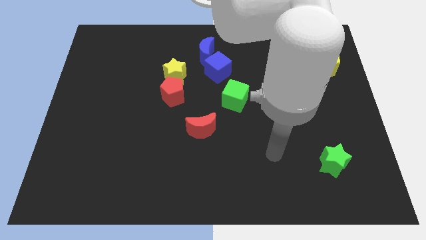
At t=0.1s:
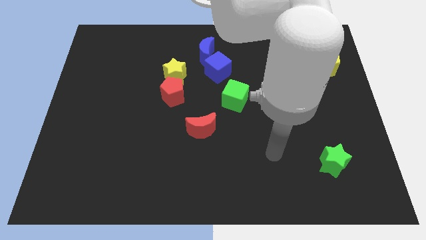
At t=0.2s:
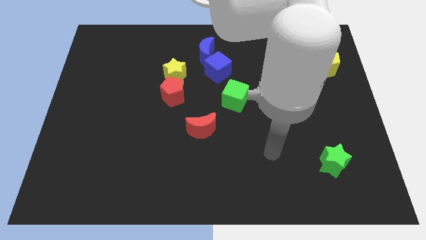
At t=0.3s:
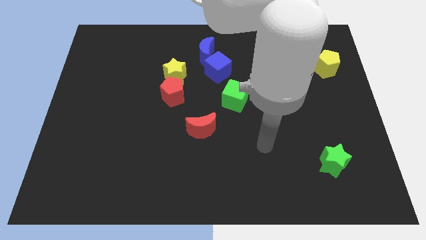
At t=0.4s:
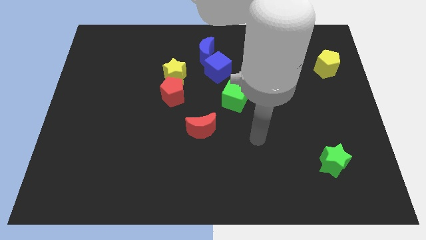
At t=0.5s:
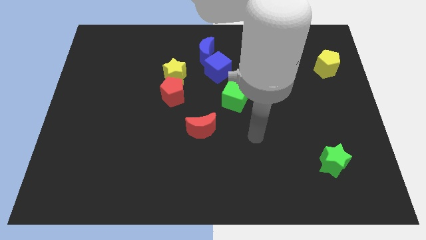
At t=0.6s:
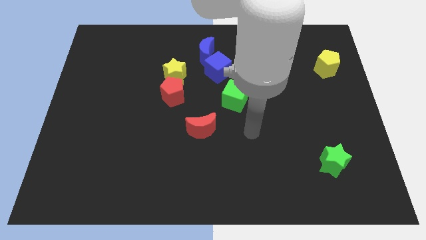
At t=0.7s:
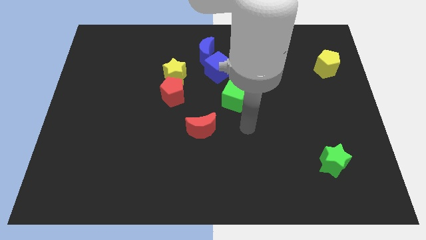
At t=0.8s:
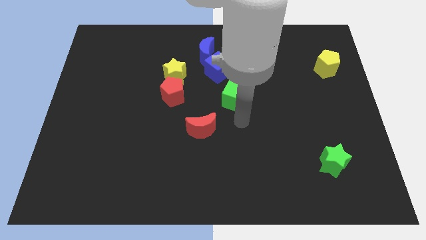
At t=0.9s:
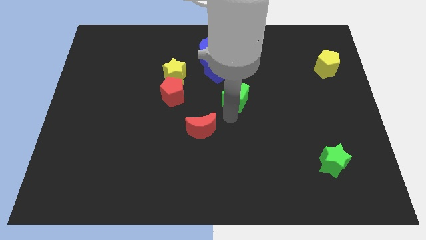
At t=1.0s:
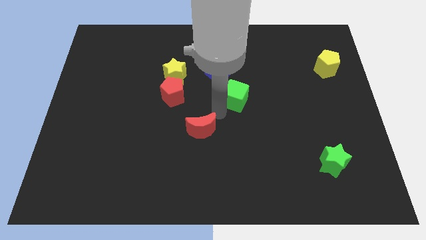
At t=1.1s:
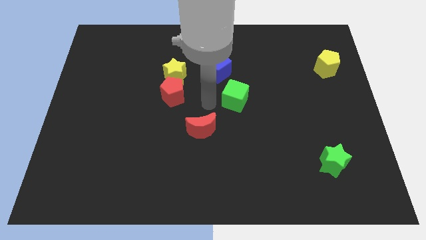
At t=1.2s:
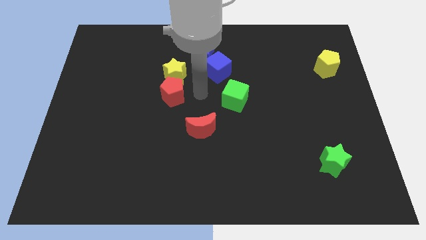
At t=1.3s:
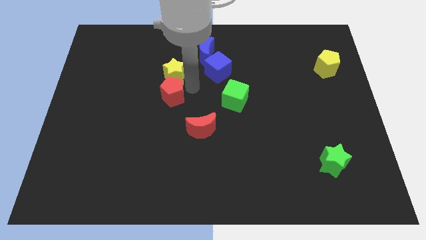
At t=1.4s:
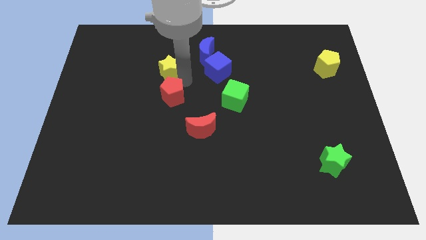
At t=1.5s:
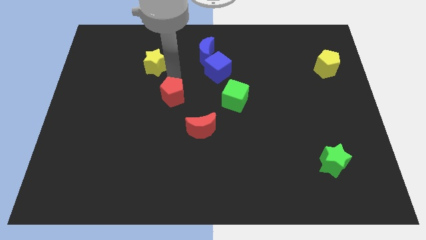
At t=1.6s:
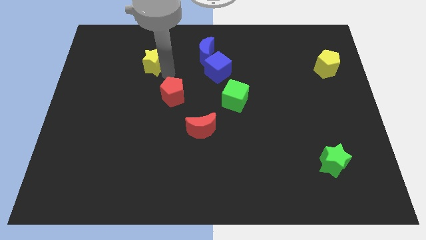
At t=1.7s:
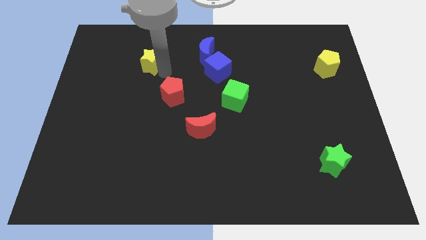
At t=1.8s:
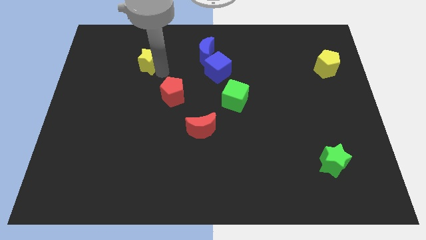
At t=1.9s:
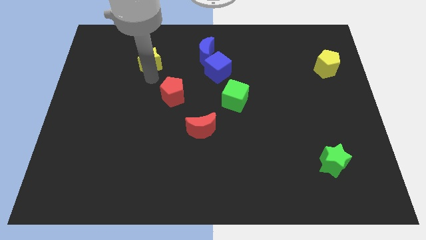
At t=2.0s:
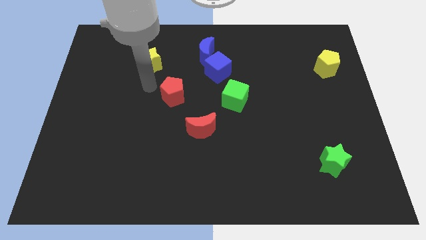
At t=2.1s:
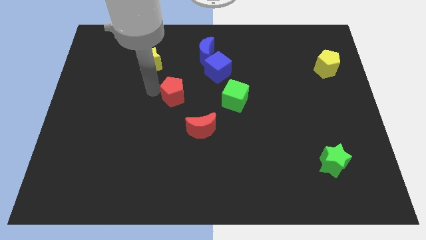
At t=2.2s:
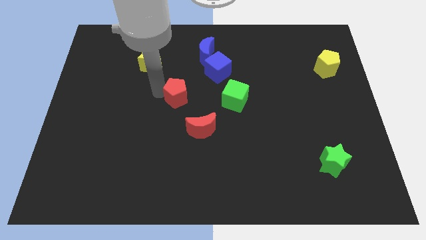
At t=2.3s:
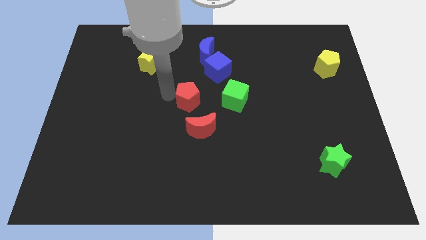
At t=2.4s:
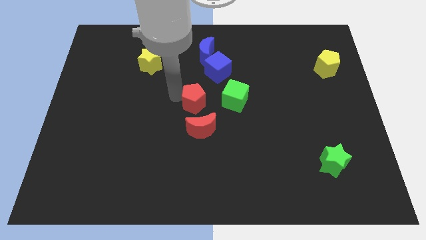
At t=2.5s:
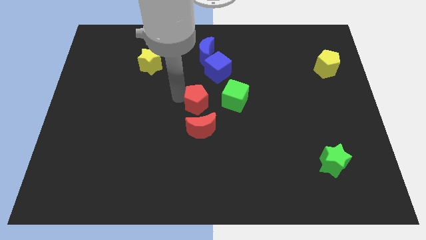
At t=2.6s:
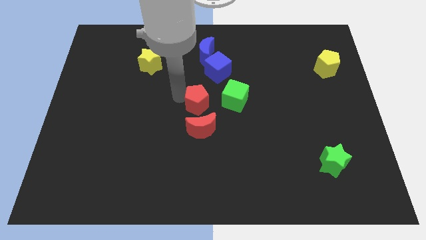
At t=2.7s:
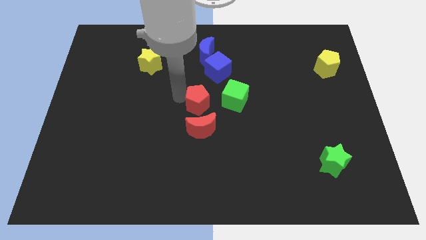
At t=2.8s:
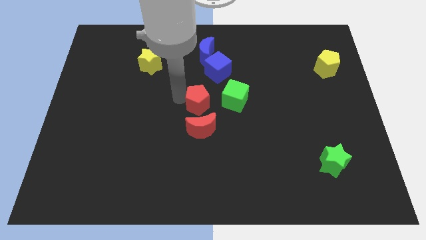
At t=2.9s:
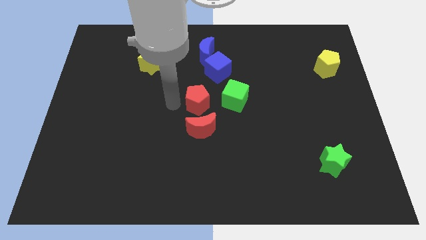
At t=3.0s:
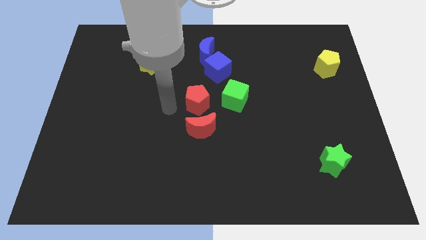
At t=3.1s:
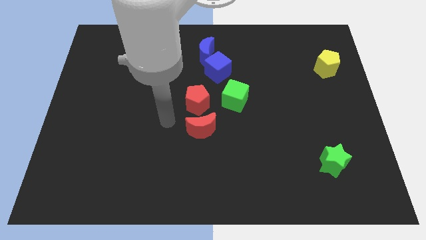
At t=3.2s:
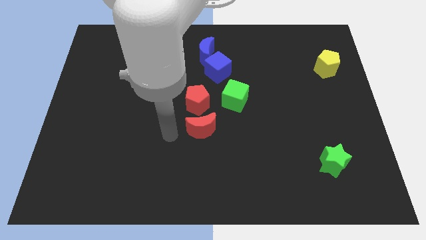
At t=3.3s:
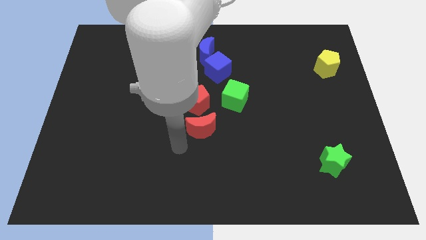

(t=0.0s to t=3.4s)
place the red pentagon left to the green cube

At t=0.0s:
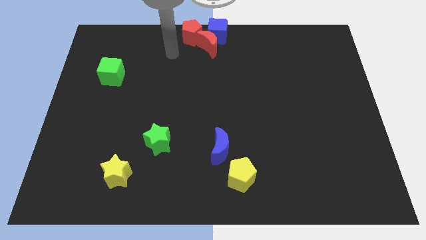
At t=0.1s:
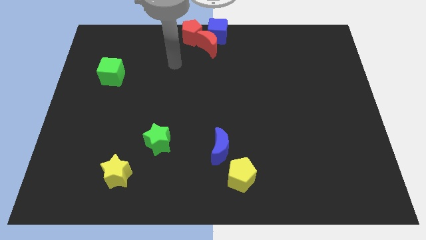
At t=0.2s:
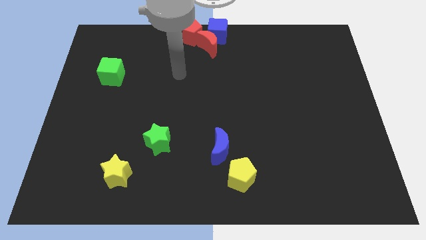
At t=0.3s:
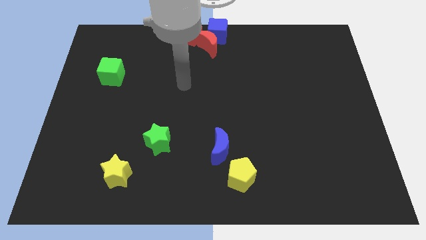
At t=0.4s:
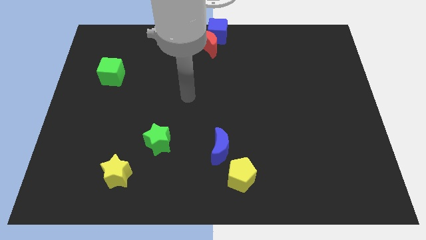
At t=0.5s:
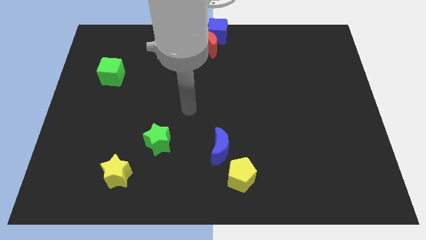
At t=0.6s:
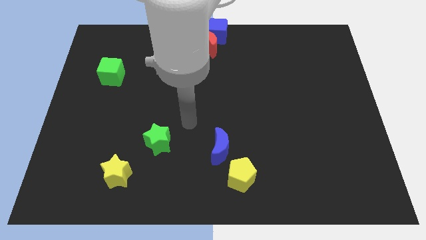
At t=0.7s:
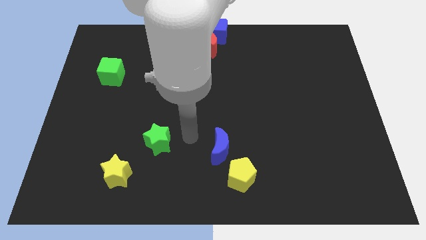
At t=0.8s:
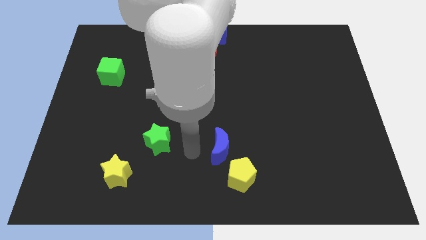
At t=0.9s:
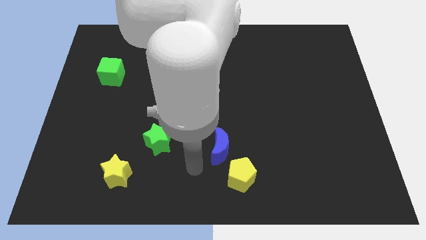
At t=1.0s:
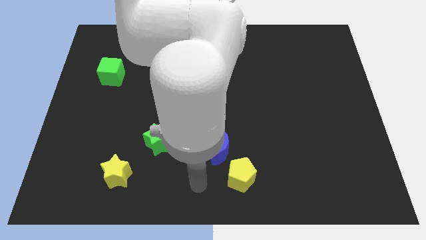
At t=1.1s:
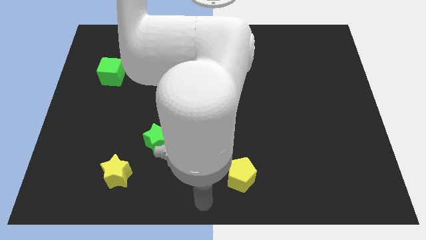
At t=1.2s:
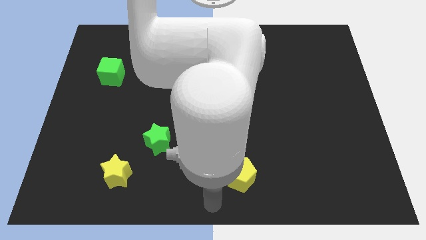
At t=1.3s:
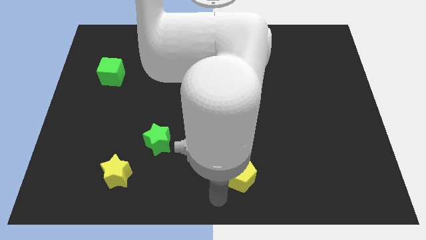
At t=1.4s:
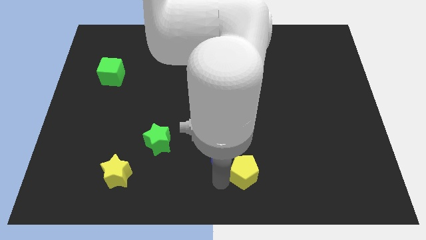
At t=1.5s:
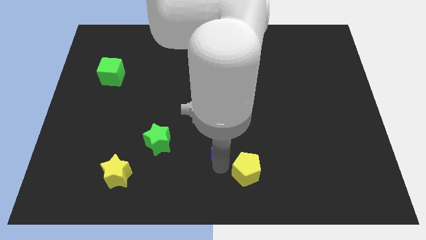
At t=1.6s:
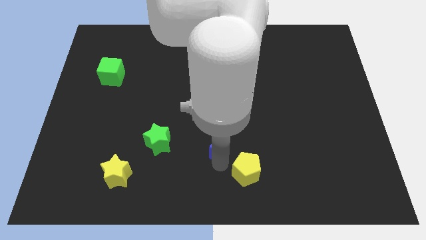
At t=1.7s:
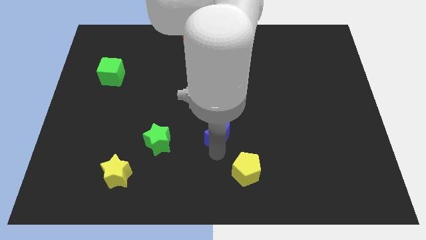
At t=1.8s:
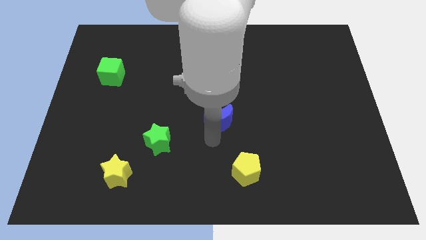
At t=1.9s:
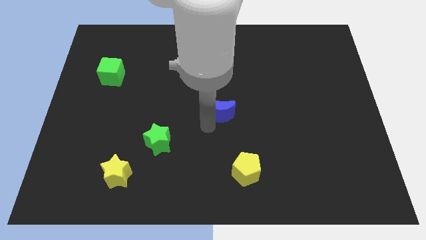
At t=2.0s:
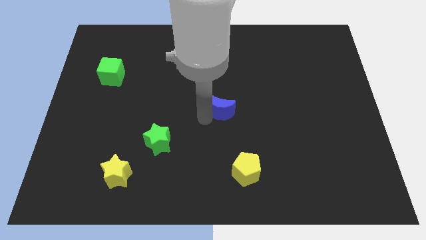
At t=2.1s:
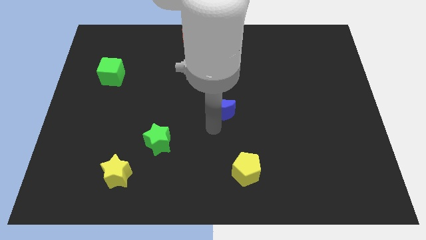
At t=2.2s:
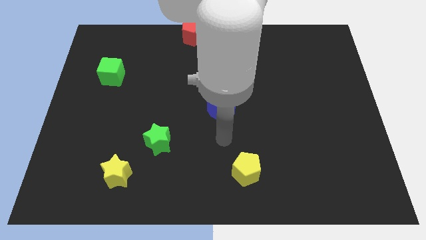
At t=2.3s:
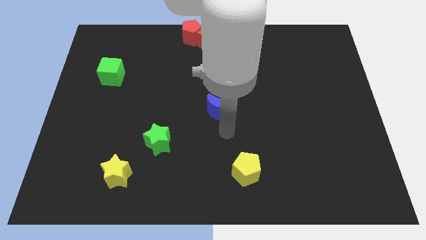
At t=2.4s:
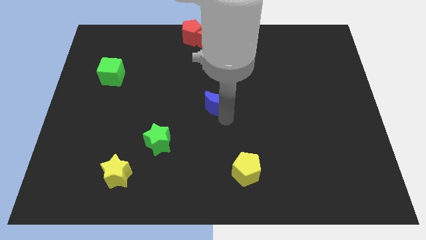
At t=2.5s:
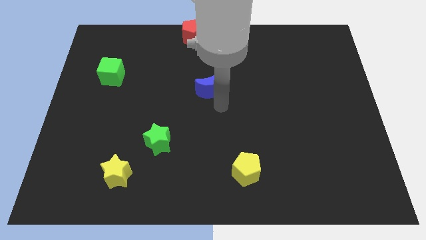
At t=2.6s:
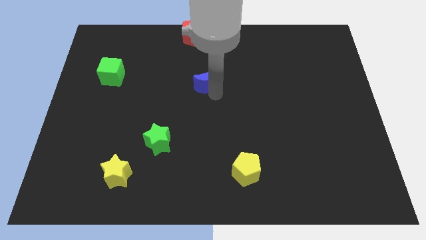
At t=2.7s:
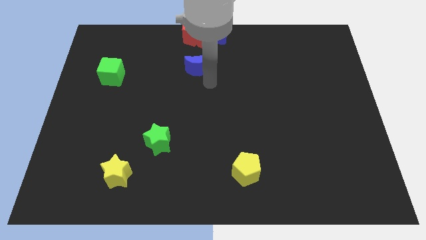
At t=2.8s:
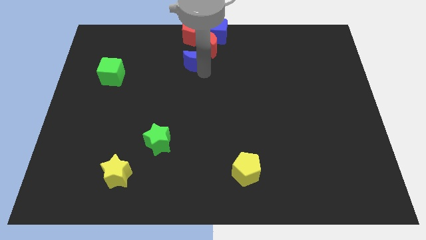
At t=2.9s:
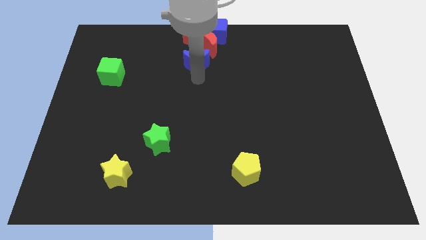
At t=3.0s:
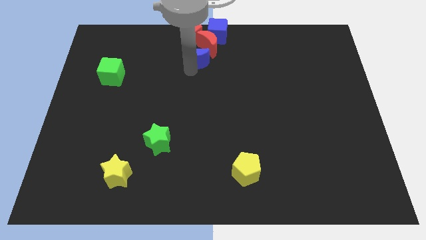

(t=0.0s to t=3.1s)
push the blue moon towards the top center of the board

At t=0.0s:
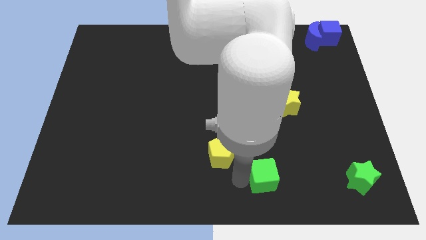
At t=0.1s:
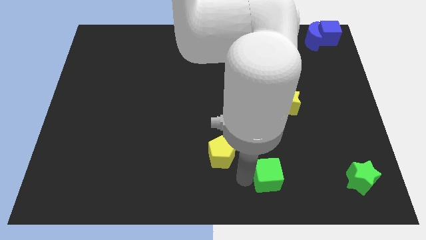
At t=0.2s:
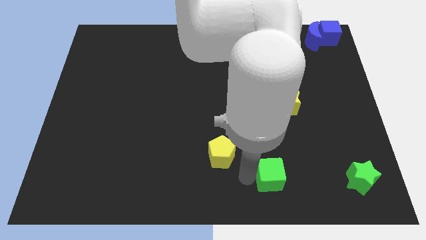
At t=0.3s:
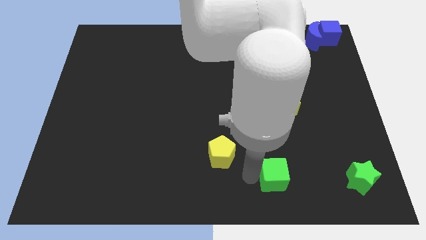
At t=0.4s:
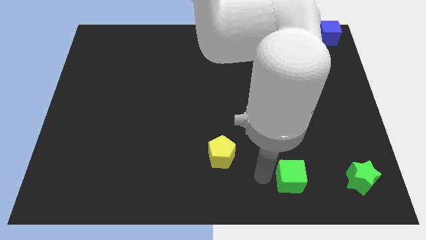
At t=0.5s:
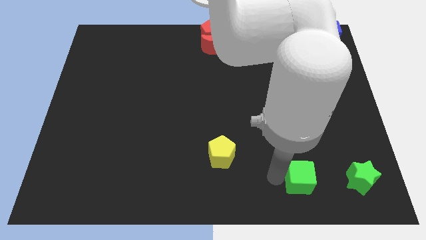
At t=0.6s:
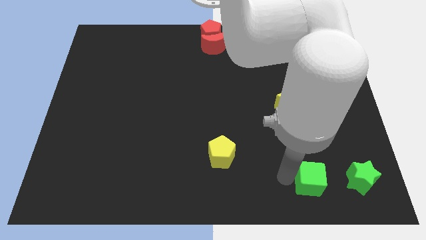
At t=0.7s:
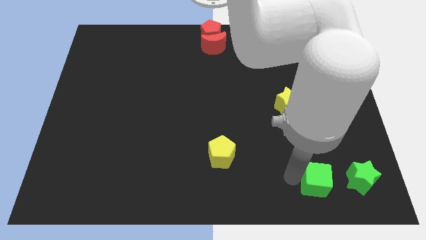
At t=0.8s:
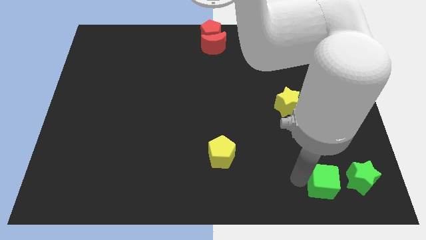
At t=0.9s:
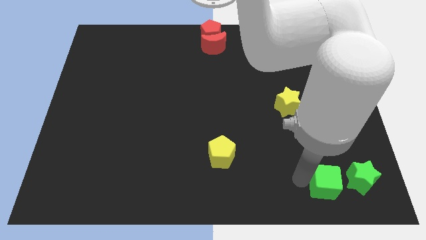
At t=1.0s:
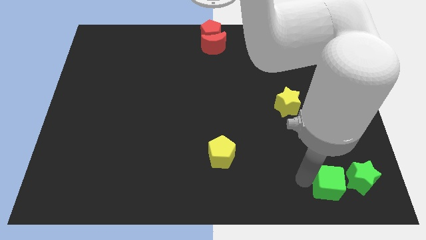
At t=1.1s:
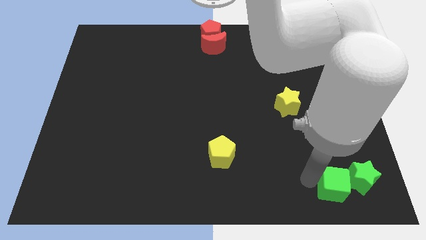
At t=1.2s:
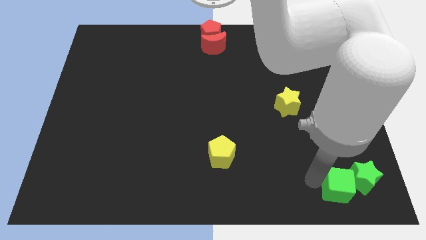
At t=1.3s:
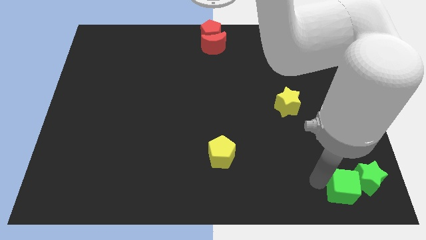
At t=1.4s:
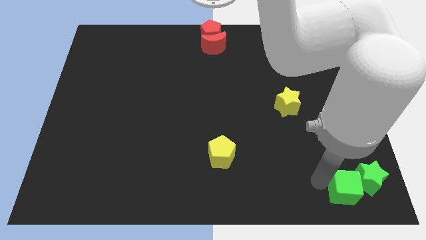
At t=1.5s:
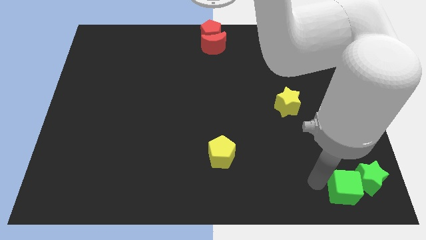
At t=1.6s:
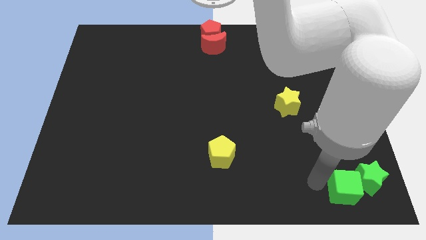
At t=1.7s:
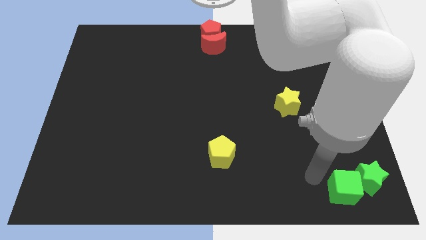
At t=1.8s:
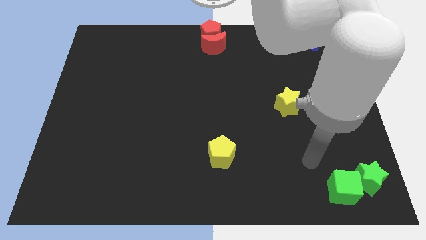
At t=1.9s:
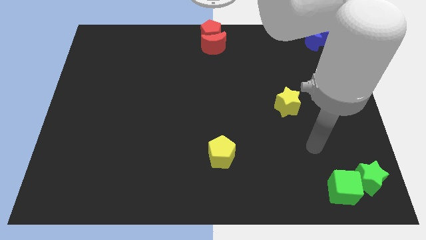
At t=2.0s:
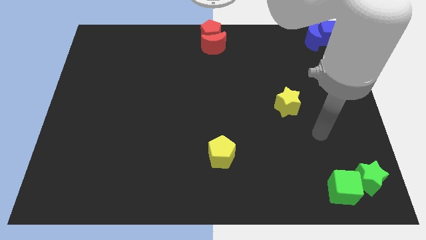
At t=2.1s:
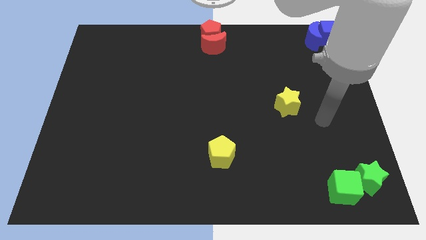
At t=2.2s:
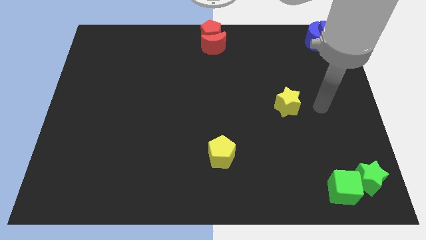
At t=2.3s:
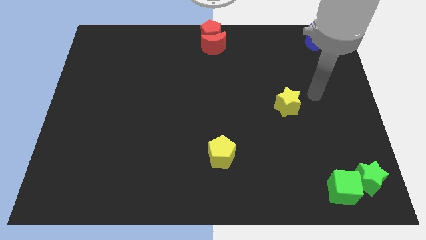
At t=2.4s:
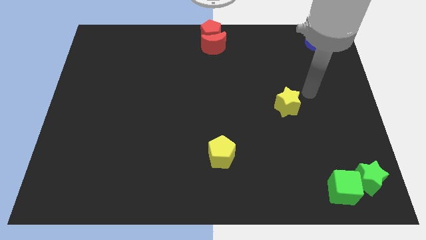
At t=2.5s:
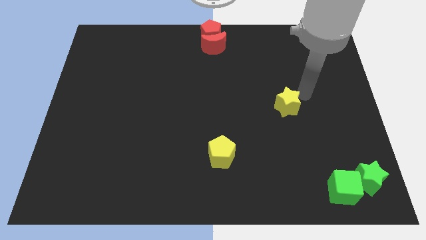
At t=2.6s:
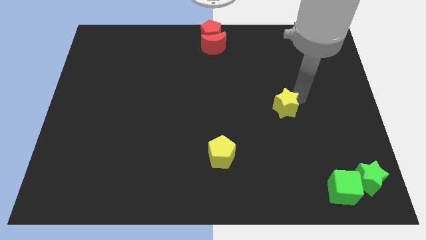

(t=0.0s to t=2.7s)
place the arm near the yellow star
